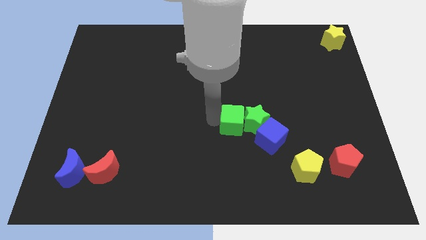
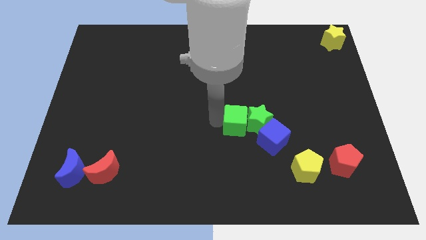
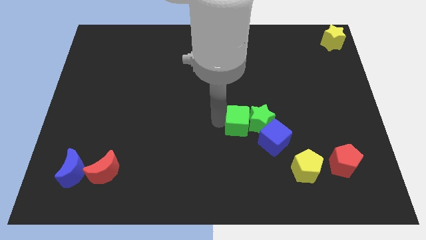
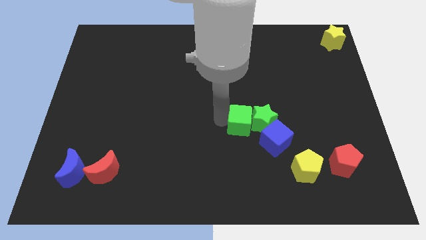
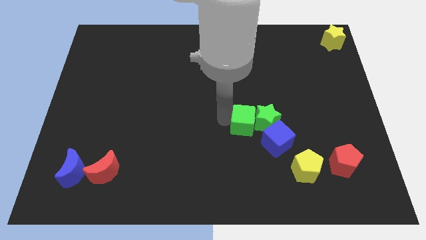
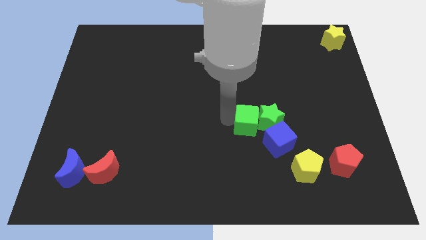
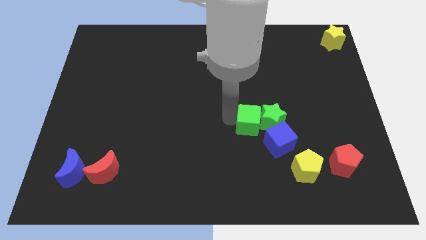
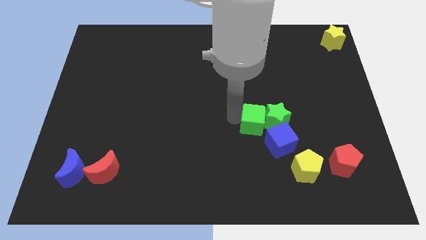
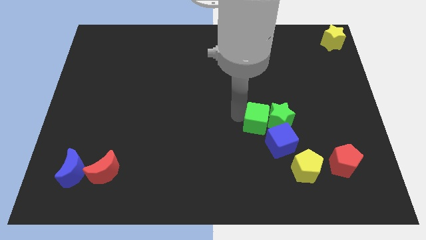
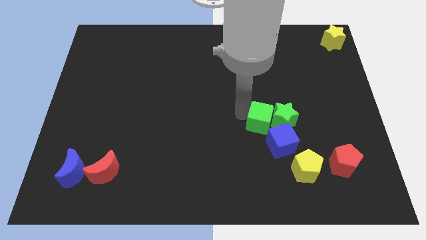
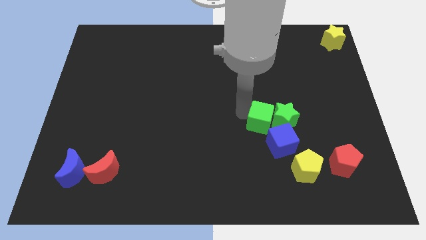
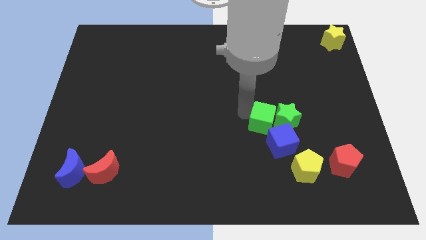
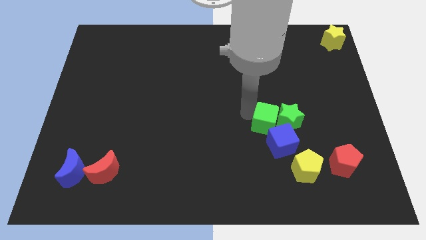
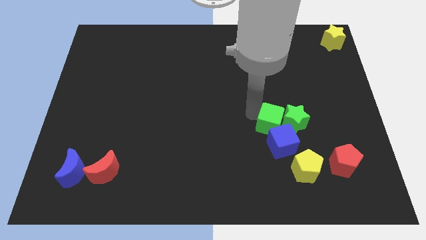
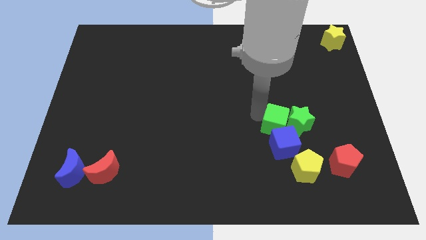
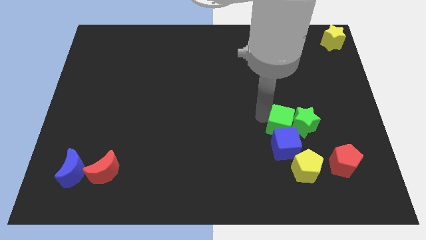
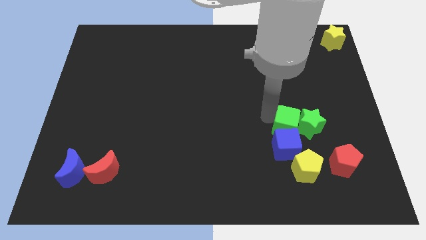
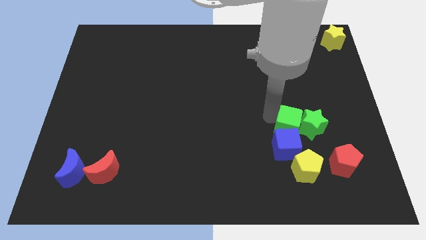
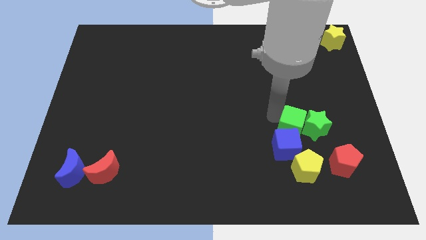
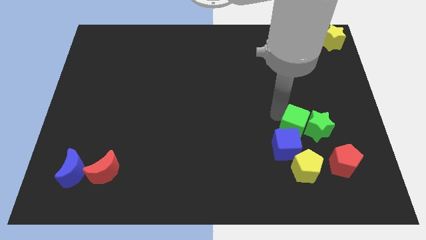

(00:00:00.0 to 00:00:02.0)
slide both the green blocks from center to center right side of the board

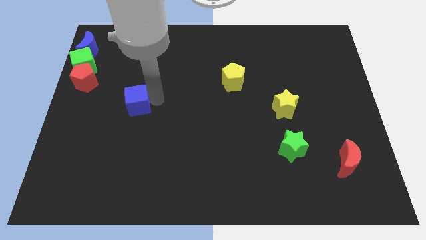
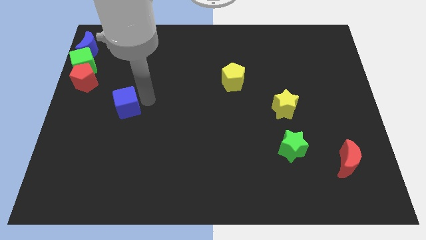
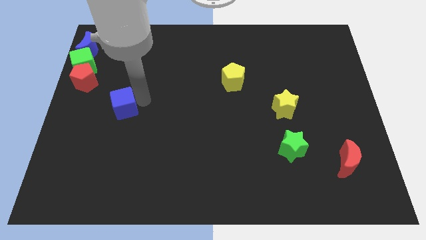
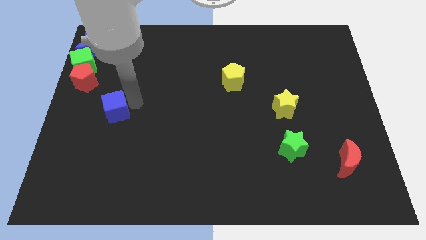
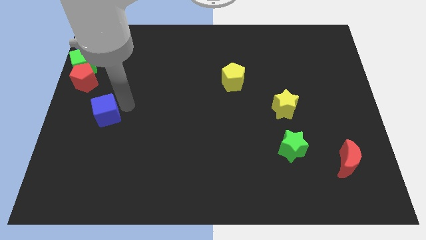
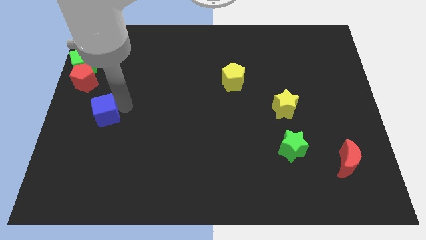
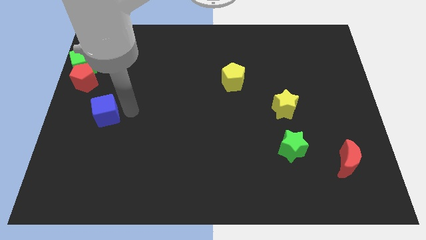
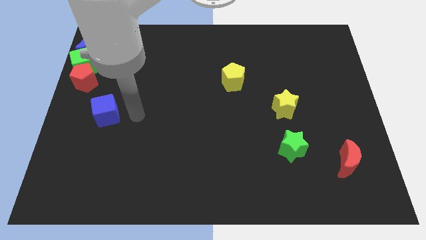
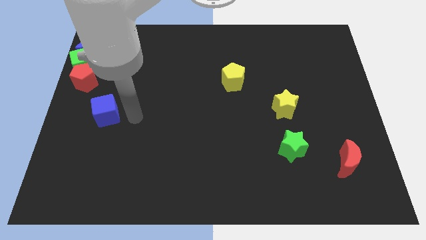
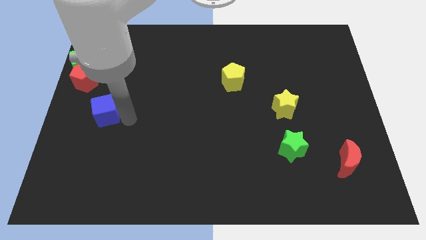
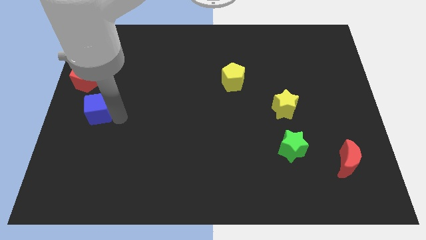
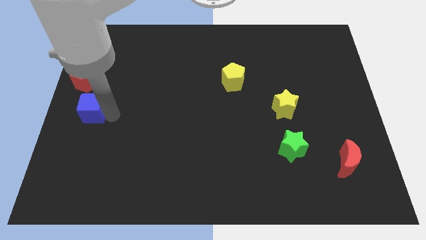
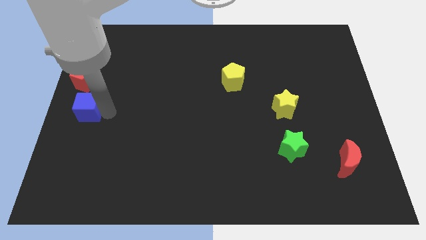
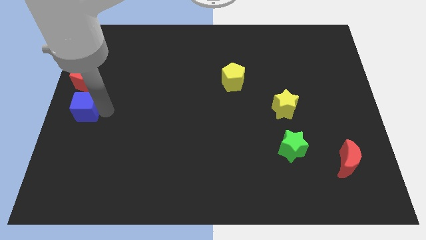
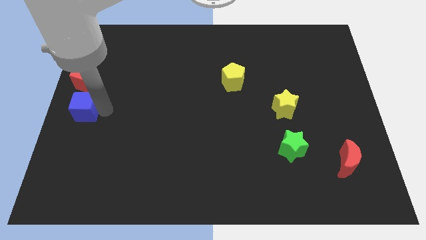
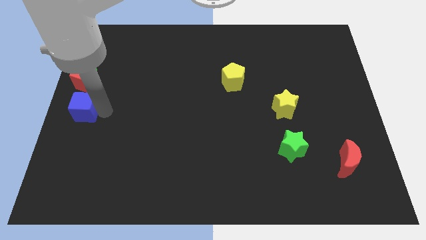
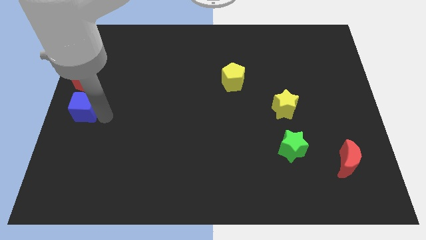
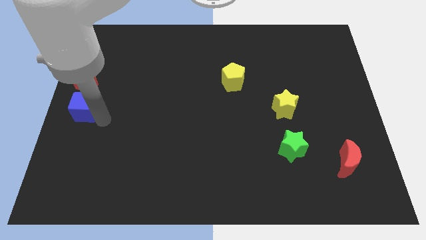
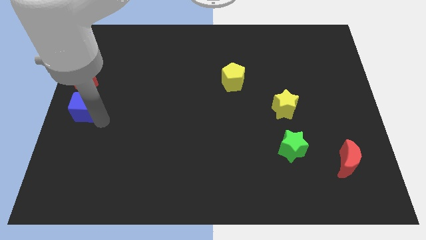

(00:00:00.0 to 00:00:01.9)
put the blue cube underneath the red pentagon

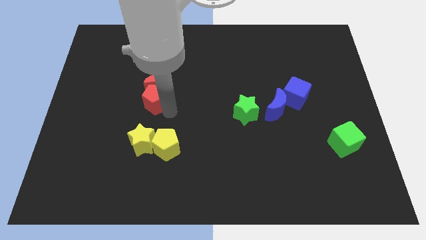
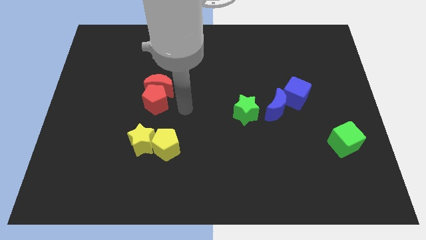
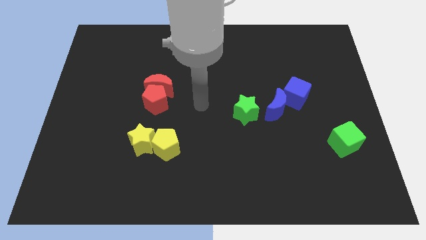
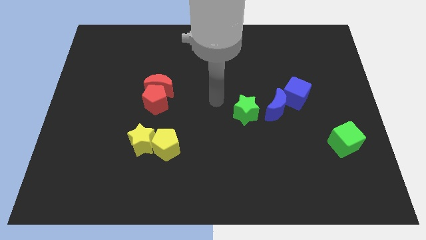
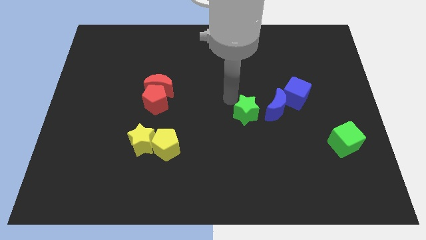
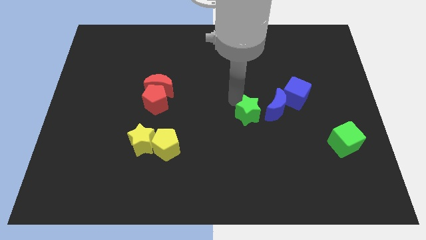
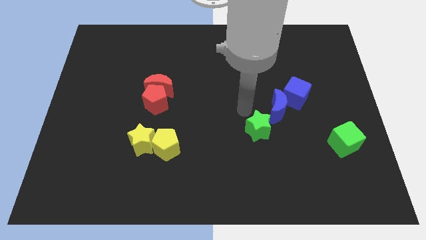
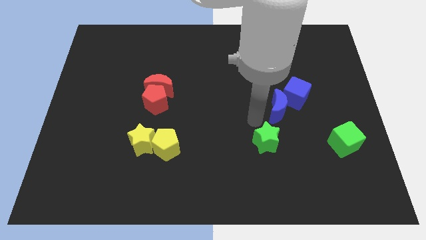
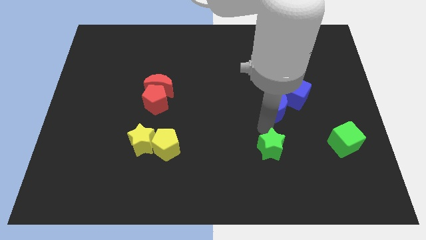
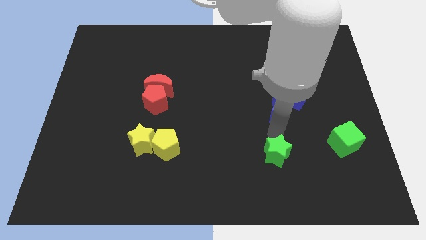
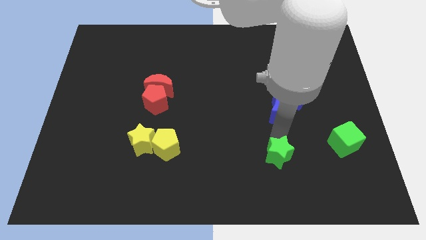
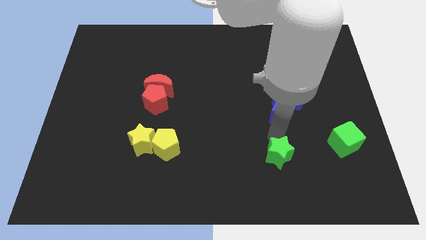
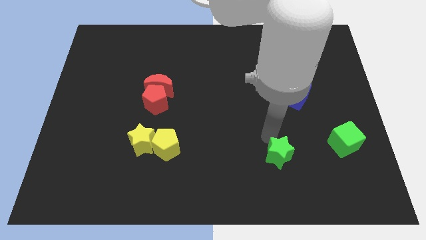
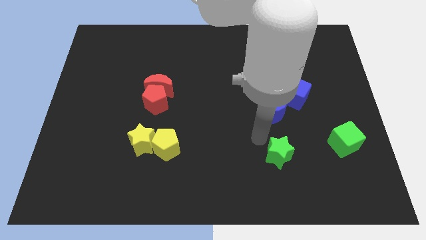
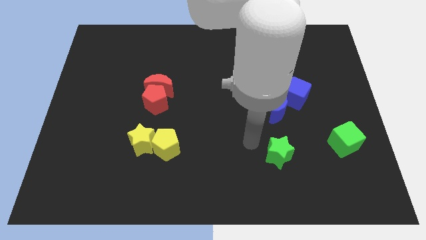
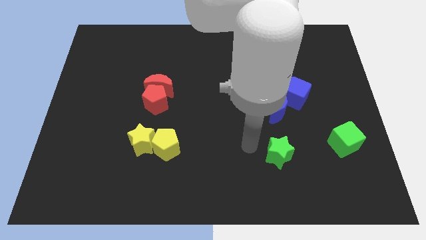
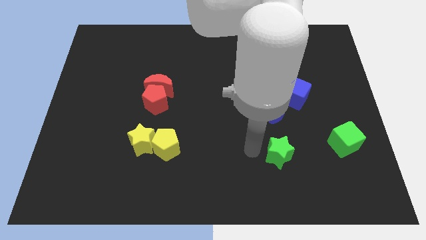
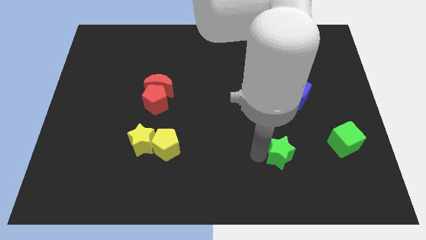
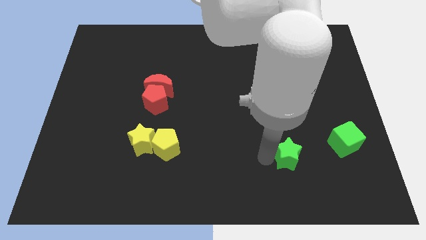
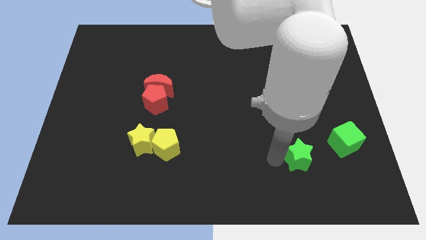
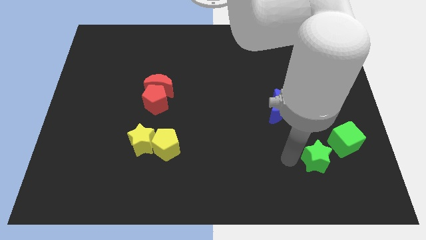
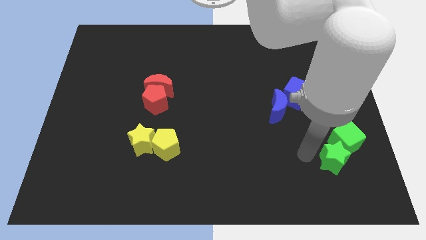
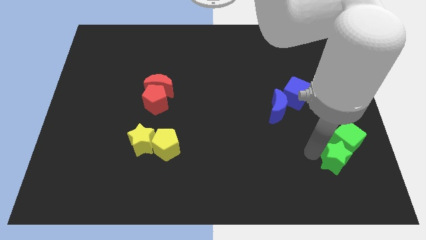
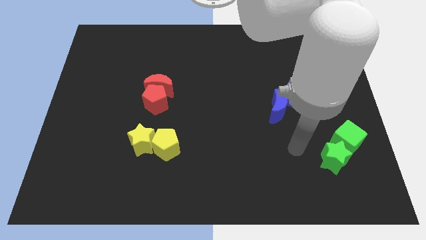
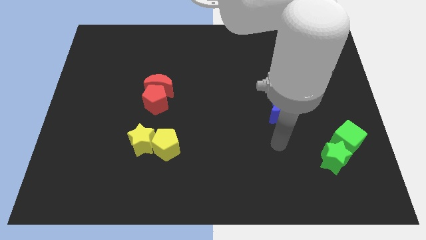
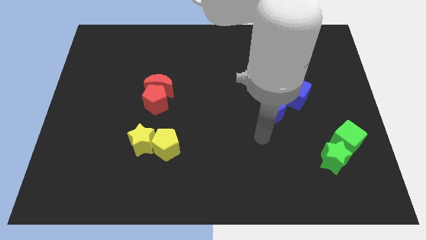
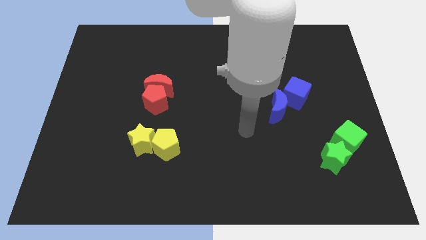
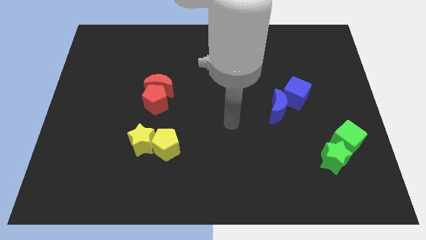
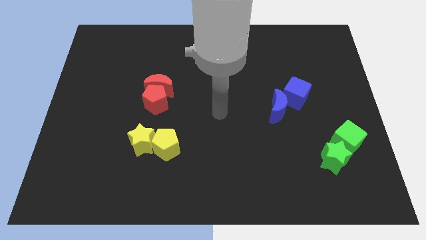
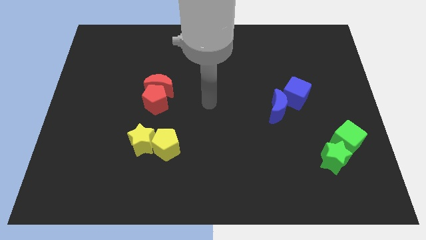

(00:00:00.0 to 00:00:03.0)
push the green star into the green cube

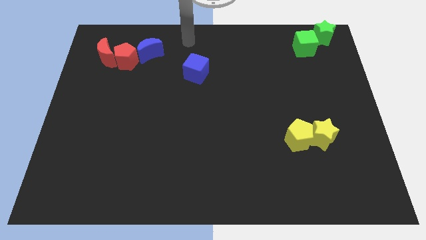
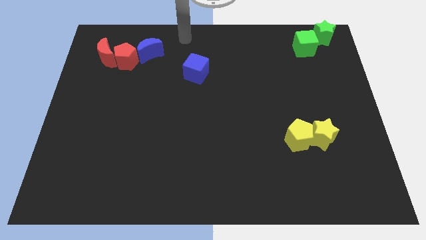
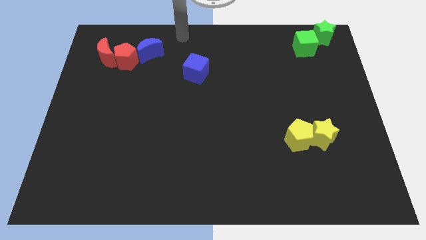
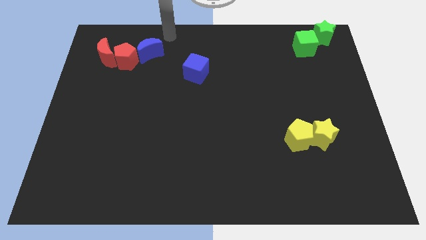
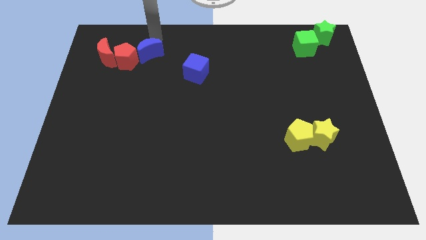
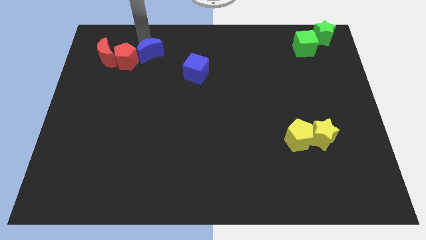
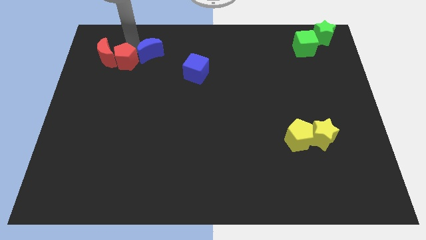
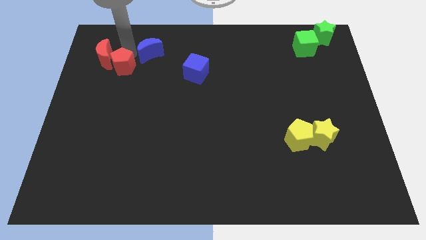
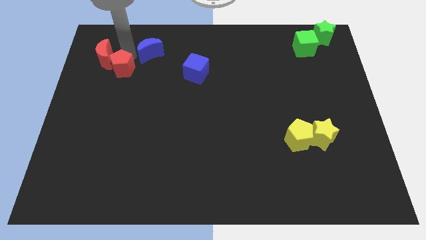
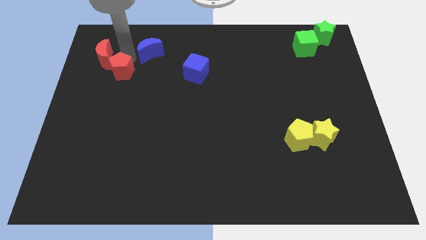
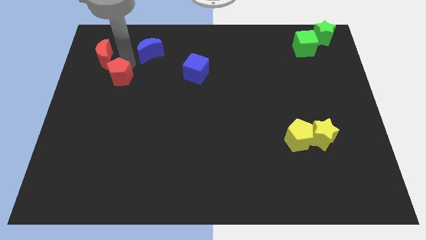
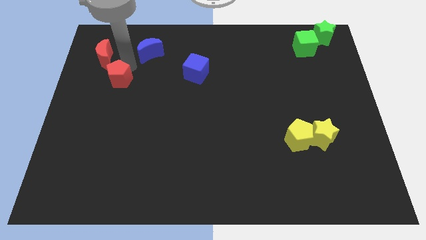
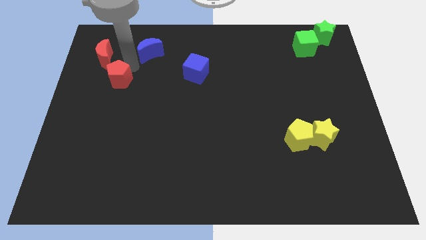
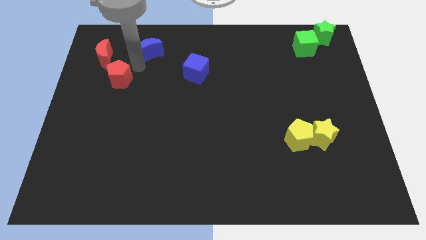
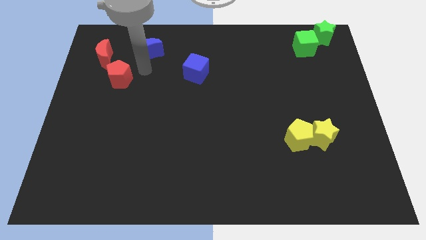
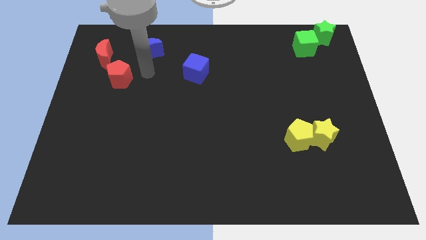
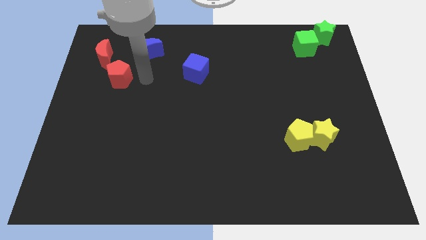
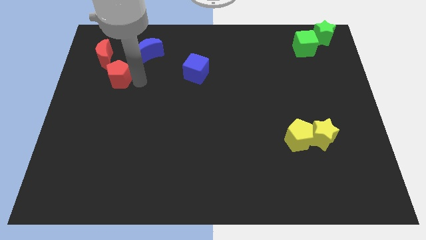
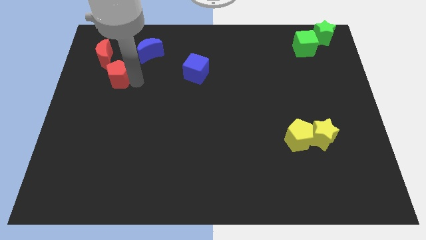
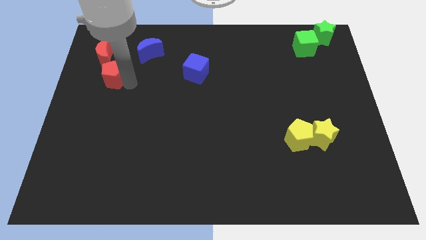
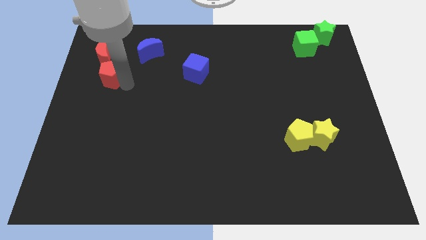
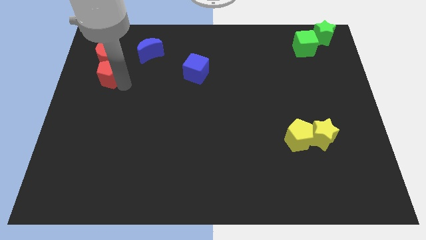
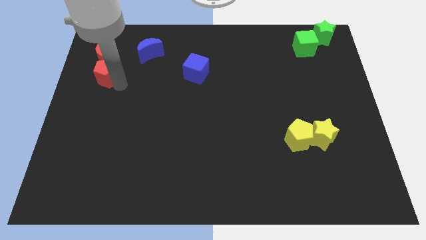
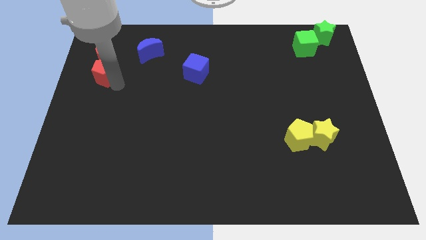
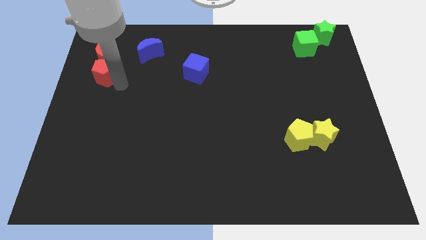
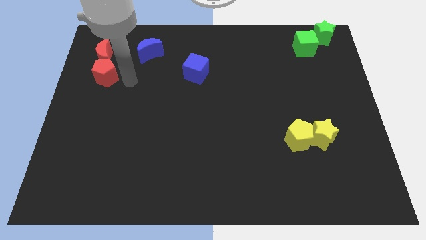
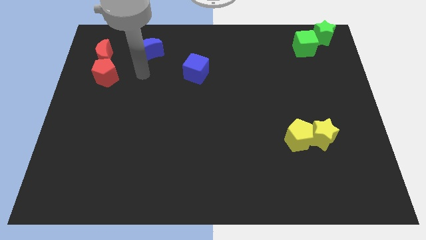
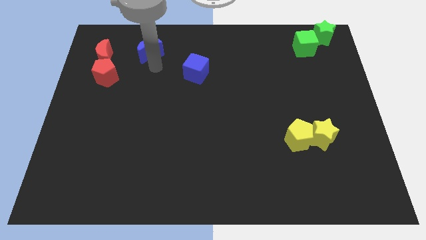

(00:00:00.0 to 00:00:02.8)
move the red pentagon to the bottom of the red crescent
